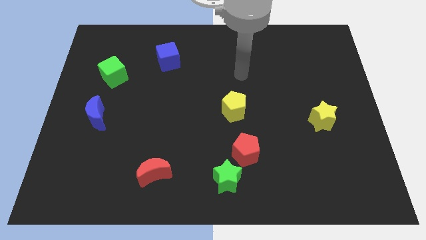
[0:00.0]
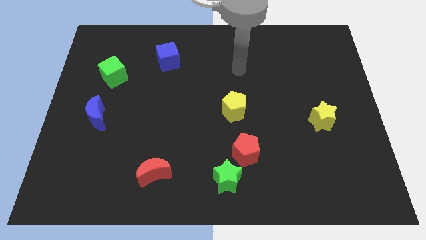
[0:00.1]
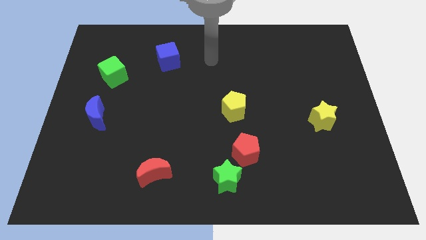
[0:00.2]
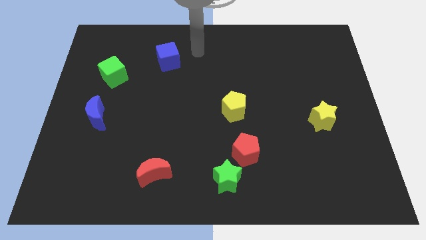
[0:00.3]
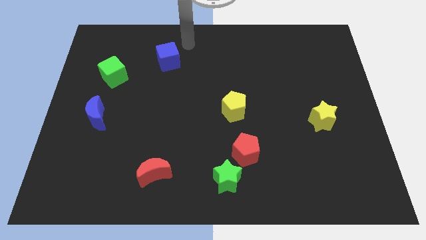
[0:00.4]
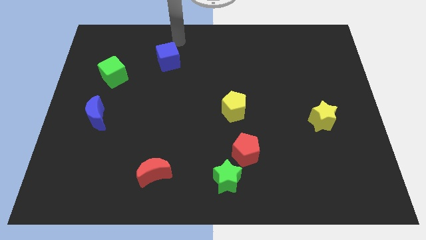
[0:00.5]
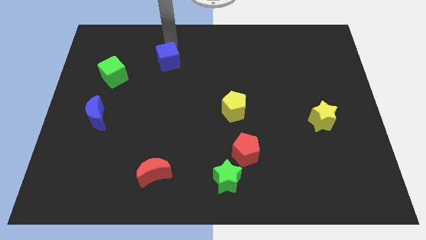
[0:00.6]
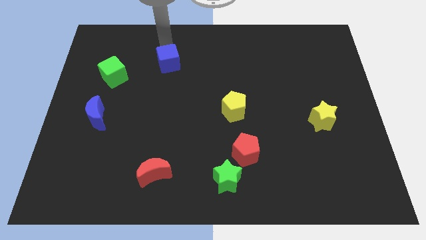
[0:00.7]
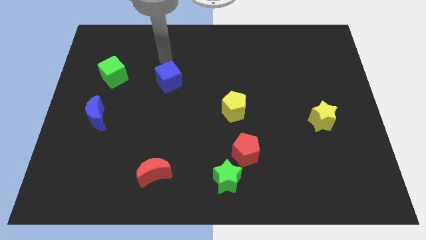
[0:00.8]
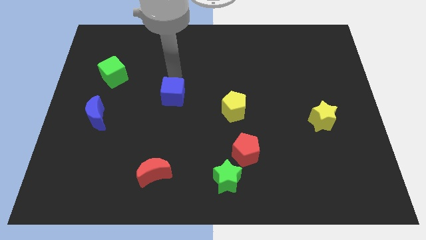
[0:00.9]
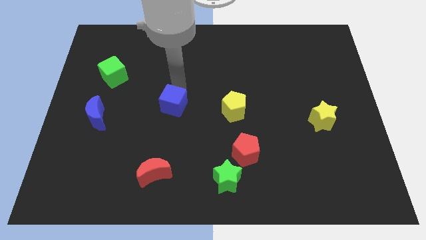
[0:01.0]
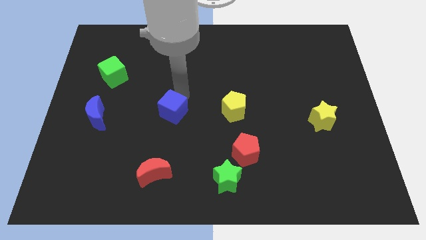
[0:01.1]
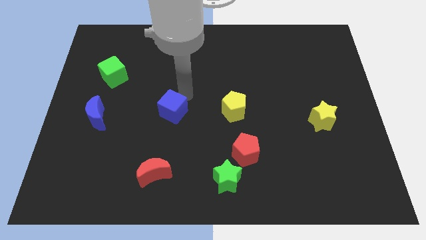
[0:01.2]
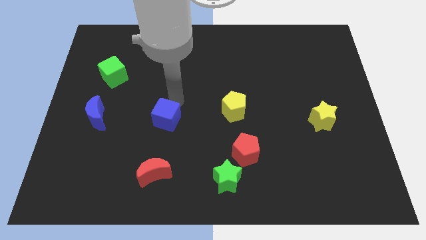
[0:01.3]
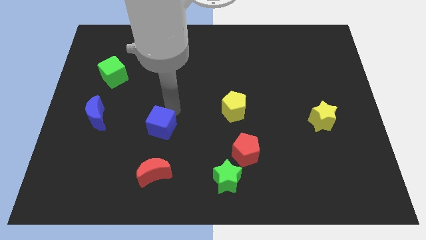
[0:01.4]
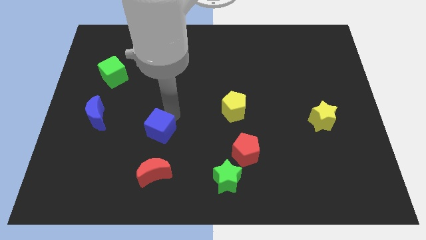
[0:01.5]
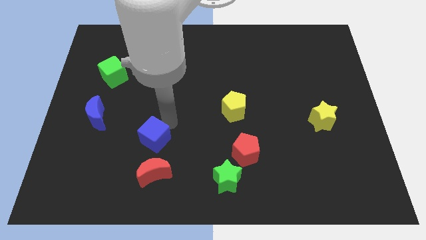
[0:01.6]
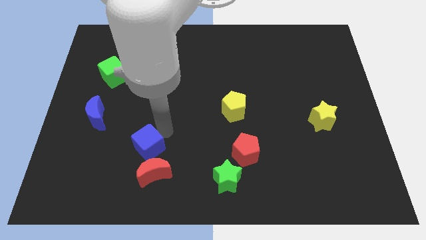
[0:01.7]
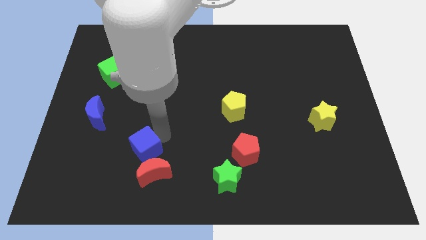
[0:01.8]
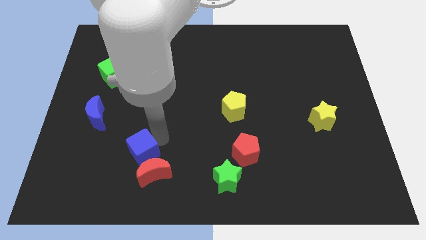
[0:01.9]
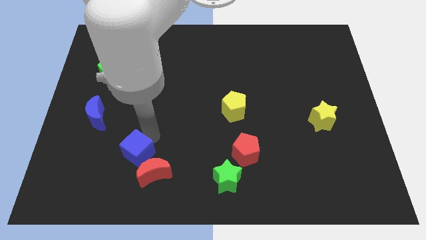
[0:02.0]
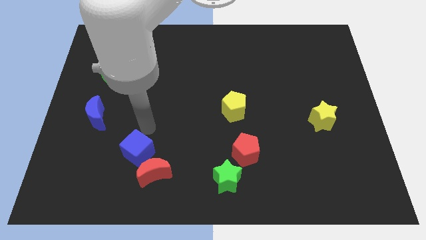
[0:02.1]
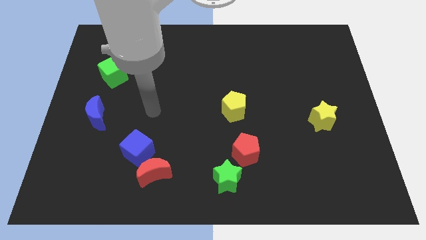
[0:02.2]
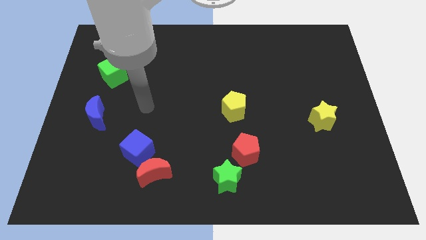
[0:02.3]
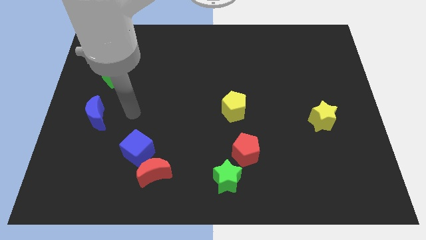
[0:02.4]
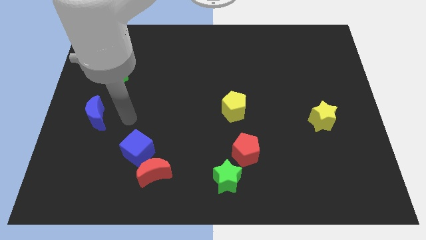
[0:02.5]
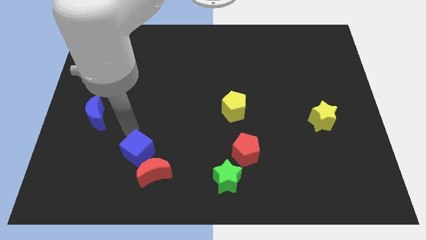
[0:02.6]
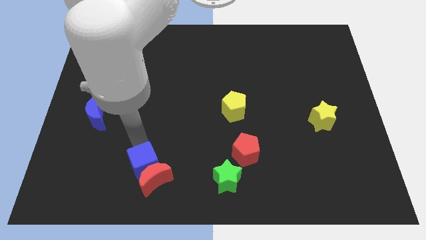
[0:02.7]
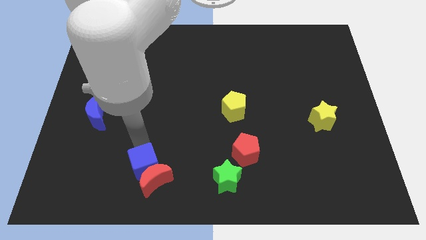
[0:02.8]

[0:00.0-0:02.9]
slide the blue cube towards the red moon

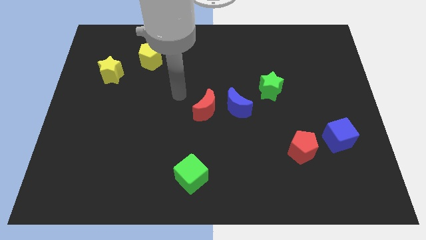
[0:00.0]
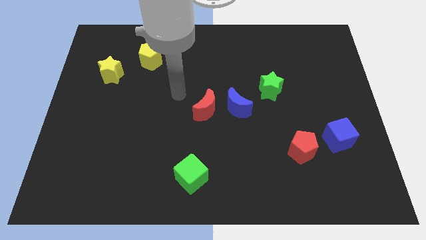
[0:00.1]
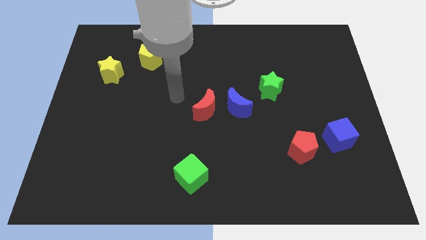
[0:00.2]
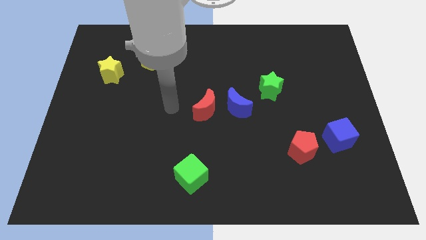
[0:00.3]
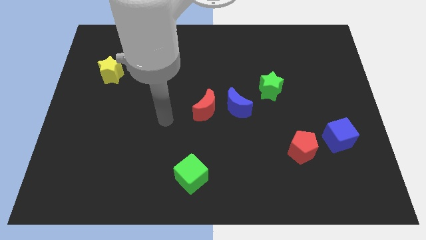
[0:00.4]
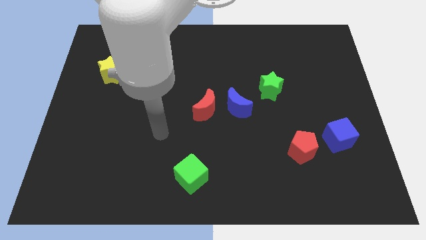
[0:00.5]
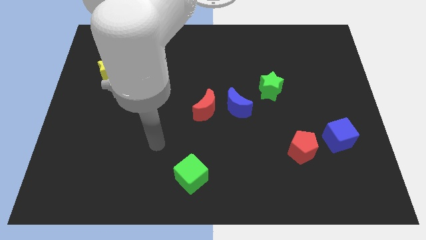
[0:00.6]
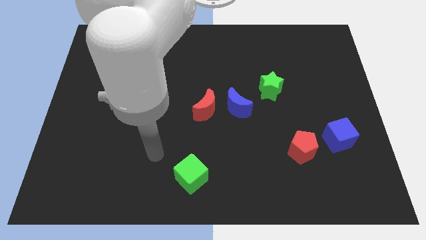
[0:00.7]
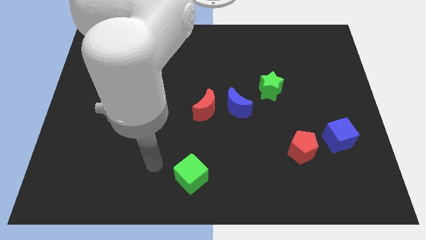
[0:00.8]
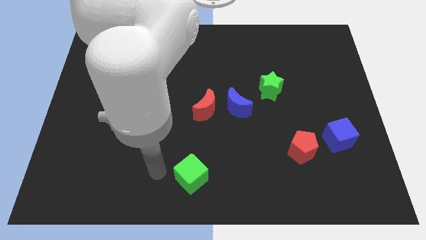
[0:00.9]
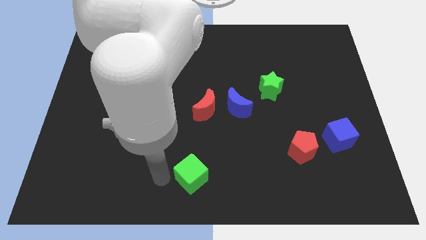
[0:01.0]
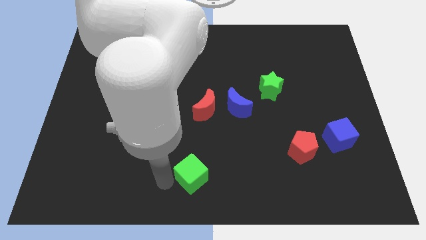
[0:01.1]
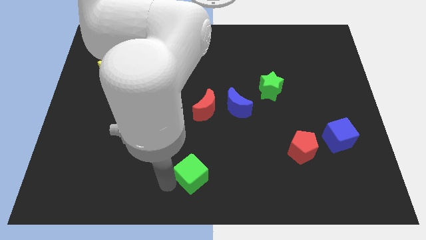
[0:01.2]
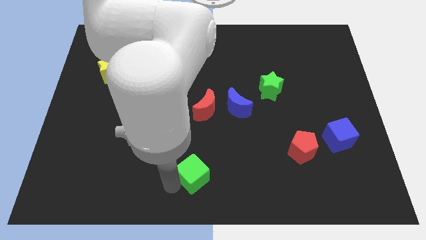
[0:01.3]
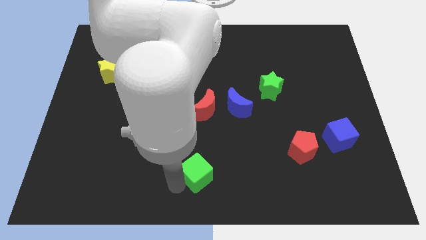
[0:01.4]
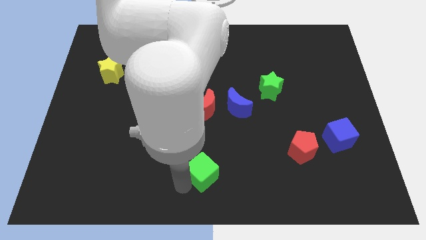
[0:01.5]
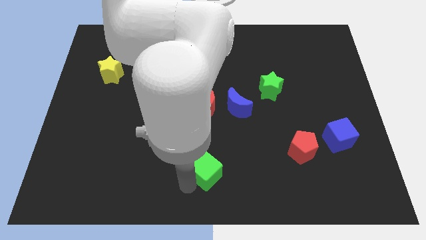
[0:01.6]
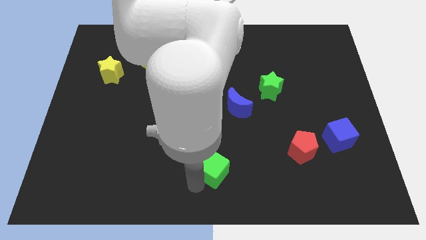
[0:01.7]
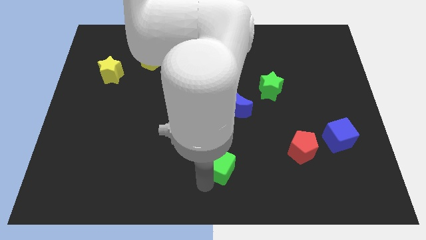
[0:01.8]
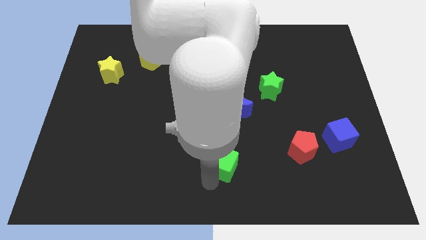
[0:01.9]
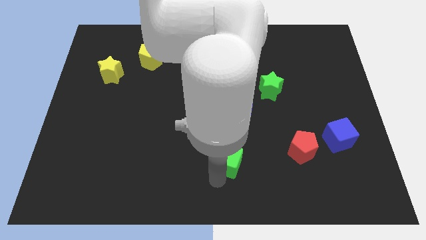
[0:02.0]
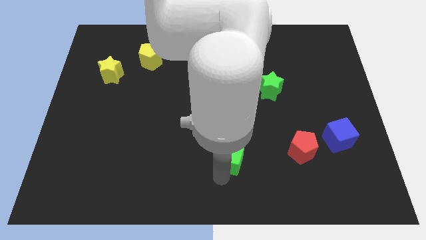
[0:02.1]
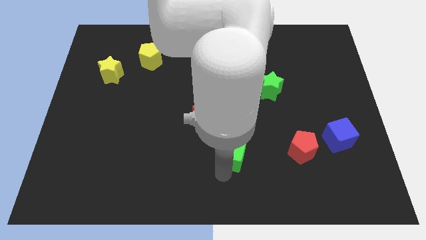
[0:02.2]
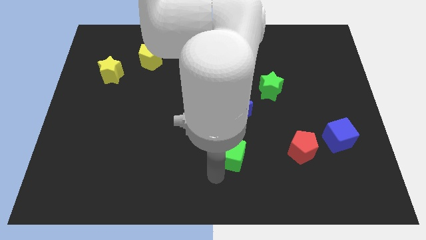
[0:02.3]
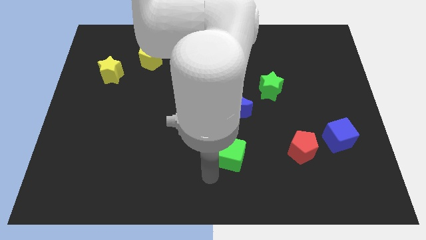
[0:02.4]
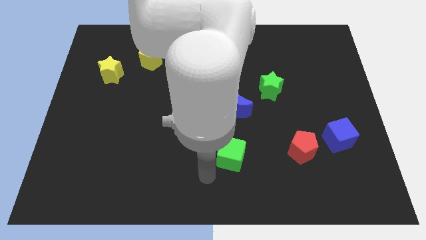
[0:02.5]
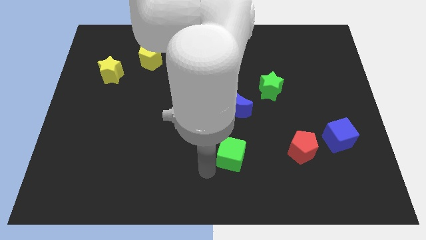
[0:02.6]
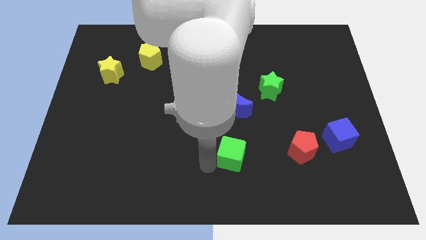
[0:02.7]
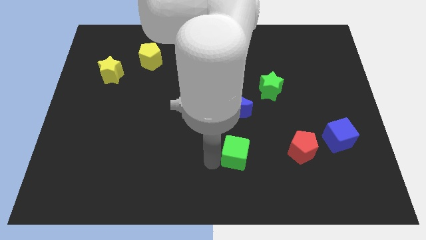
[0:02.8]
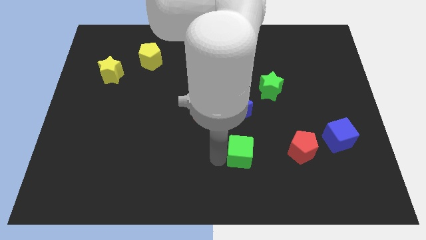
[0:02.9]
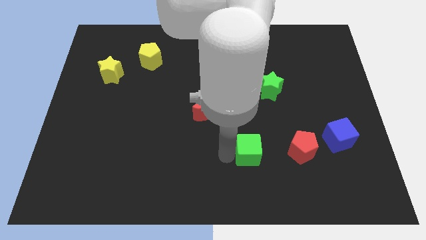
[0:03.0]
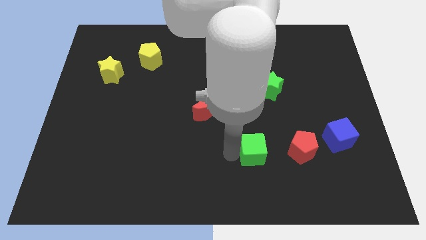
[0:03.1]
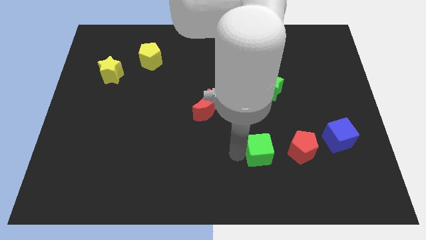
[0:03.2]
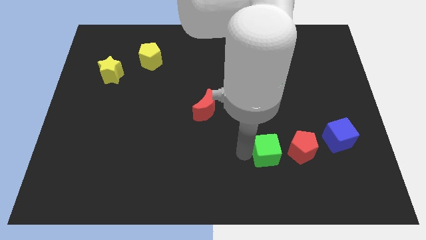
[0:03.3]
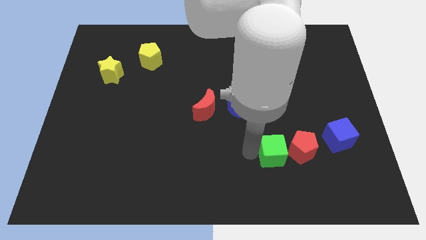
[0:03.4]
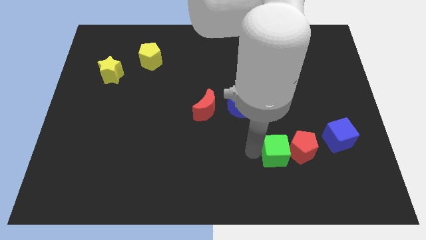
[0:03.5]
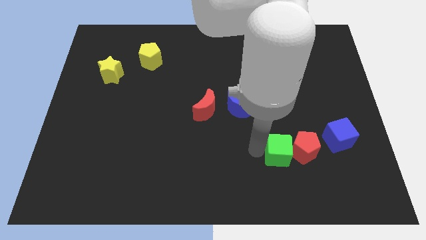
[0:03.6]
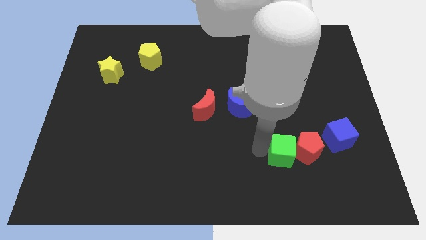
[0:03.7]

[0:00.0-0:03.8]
put the green cube close to the red pentagon

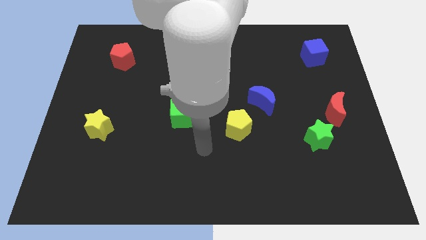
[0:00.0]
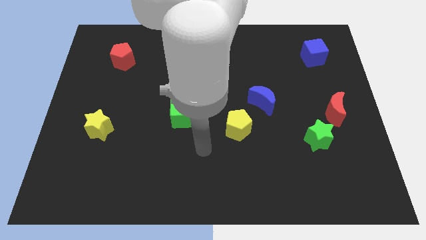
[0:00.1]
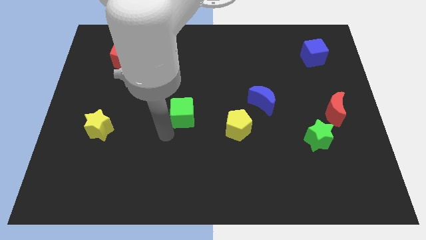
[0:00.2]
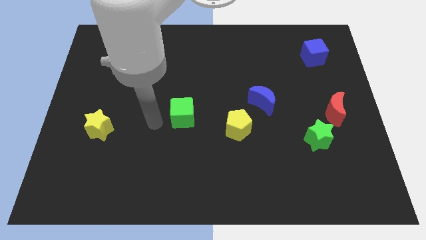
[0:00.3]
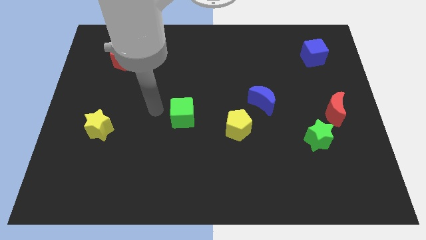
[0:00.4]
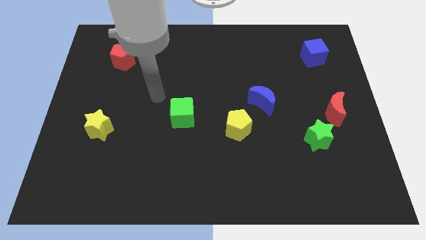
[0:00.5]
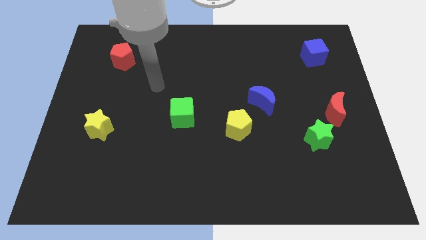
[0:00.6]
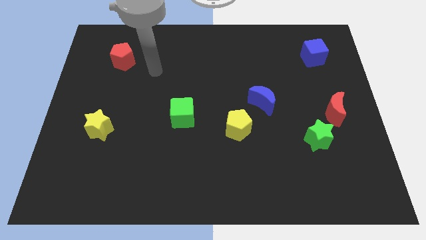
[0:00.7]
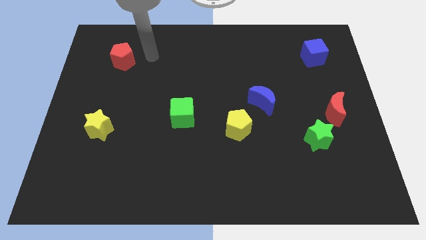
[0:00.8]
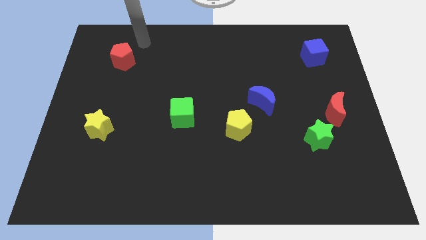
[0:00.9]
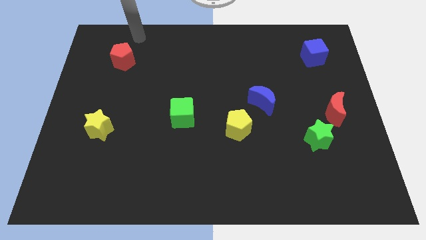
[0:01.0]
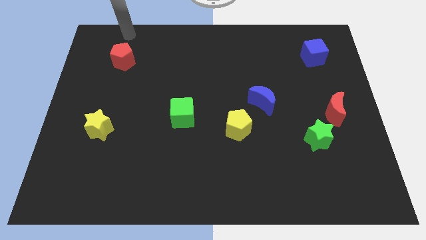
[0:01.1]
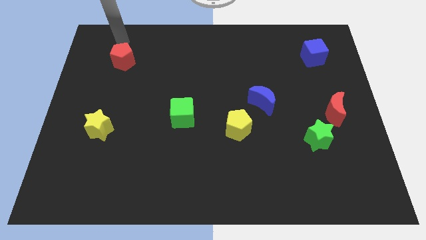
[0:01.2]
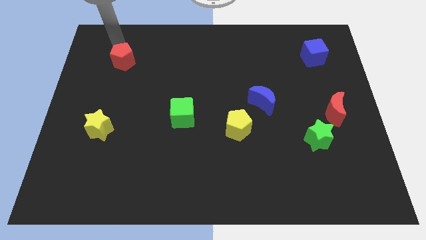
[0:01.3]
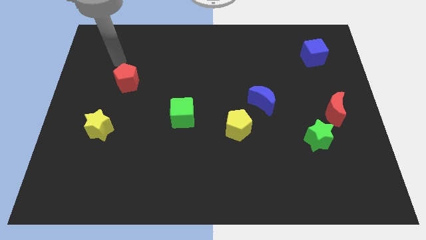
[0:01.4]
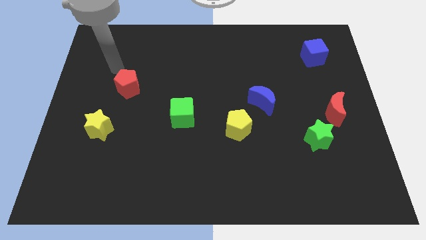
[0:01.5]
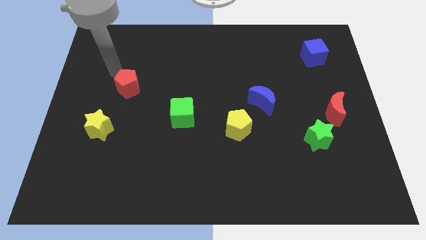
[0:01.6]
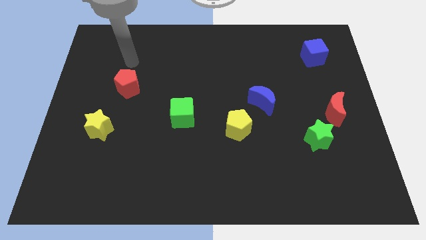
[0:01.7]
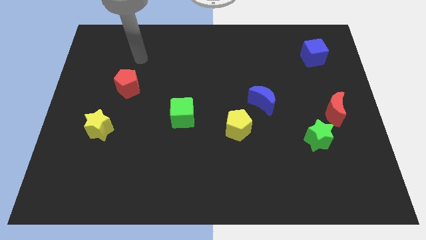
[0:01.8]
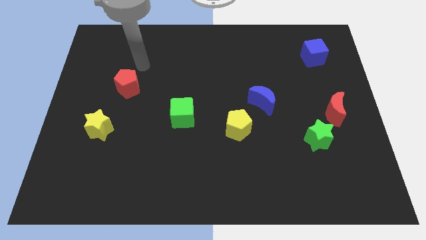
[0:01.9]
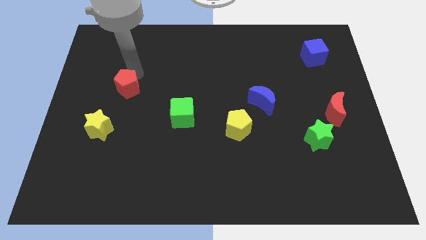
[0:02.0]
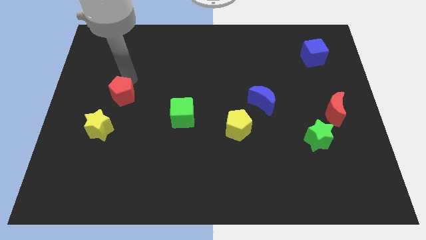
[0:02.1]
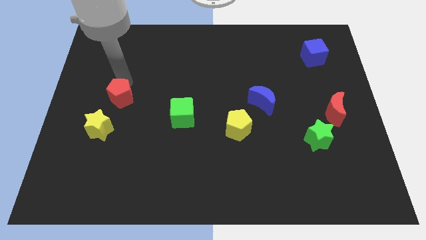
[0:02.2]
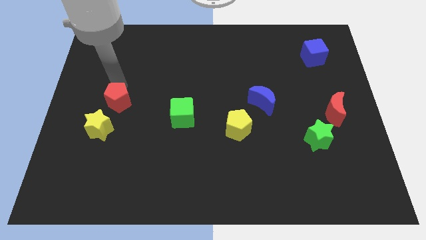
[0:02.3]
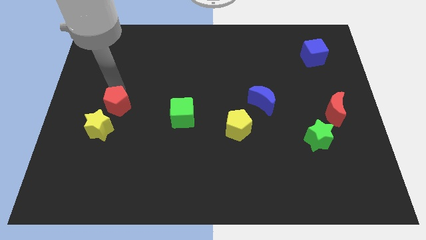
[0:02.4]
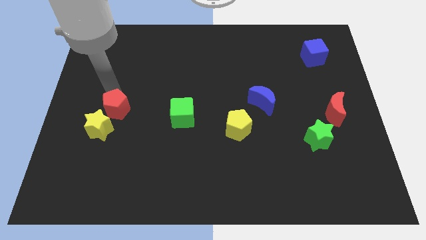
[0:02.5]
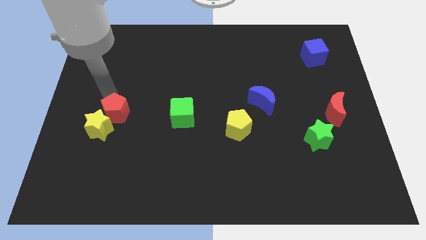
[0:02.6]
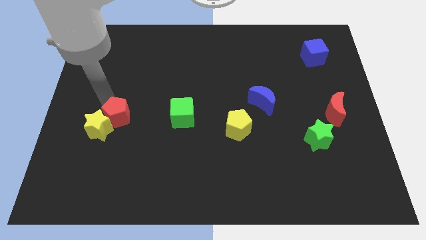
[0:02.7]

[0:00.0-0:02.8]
push the red pentagon next to the yellow star
